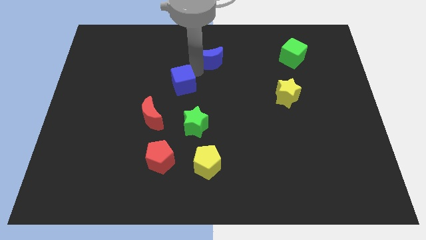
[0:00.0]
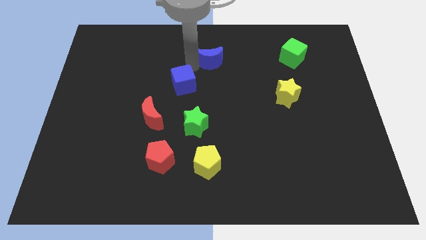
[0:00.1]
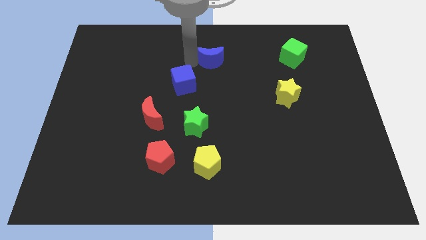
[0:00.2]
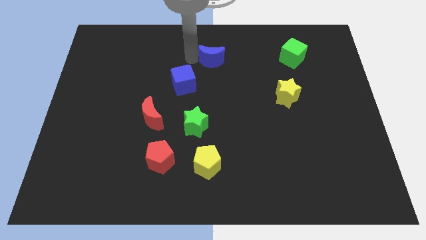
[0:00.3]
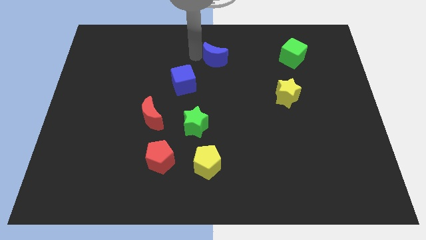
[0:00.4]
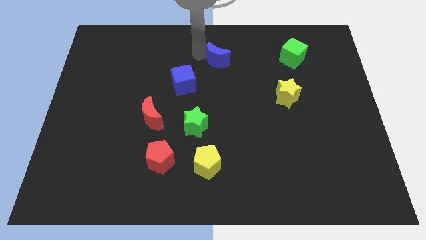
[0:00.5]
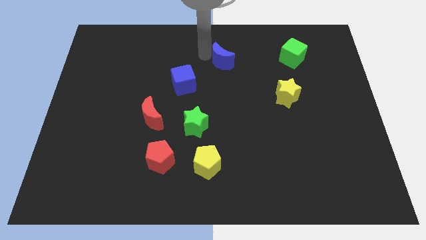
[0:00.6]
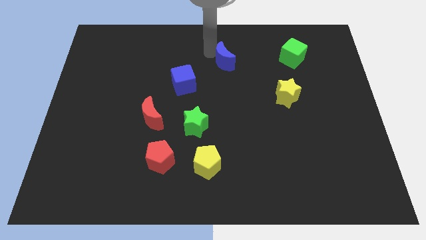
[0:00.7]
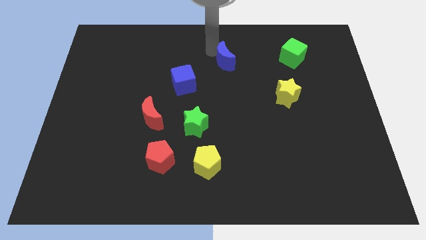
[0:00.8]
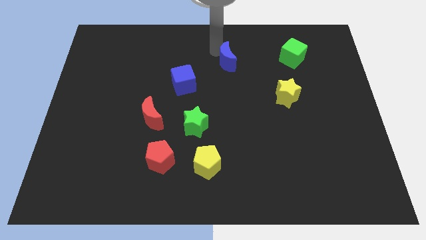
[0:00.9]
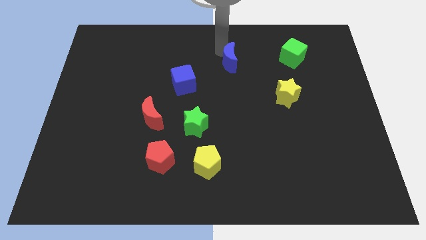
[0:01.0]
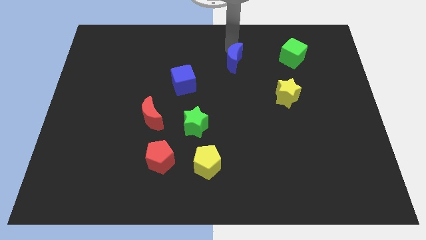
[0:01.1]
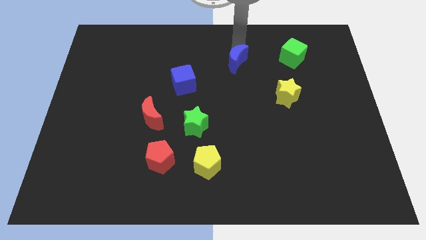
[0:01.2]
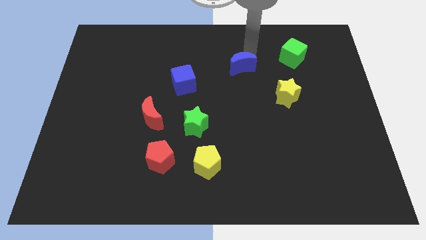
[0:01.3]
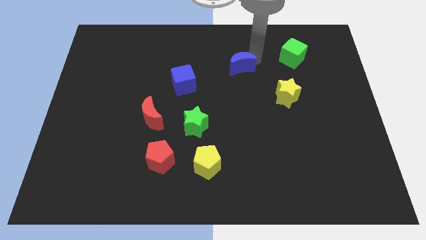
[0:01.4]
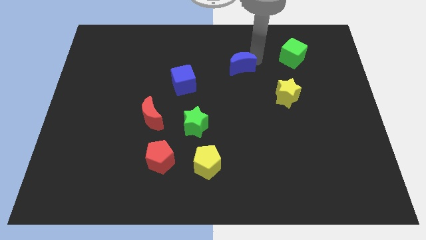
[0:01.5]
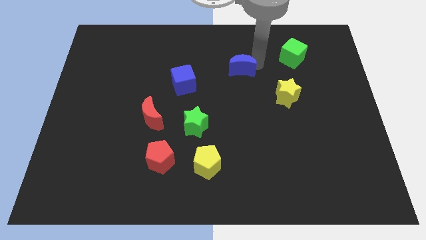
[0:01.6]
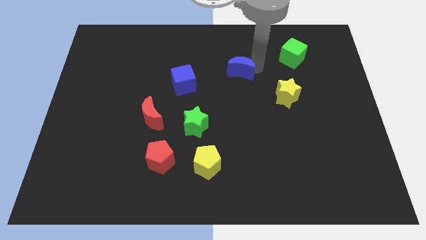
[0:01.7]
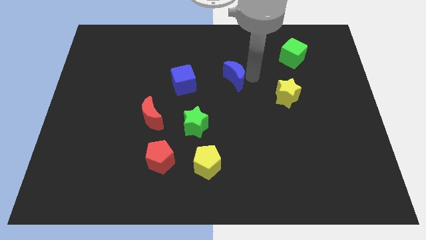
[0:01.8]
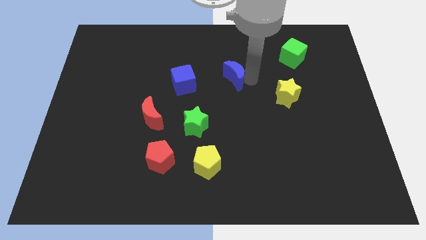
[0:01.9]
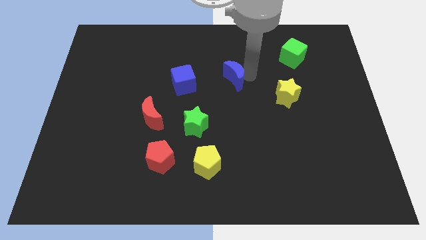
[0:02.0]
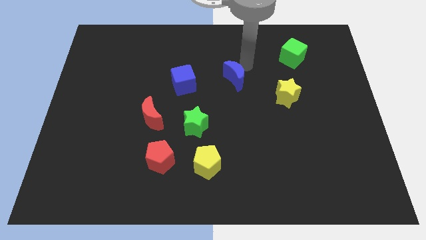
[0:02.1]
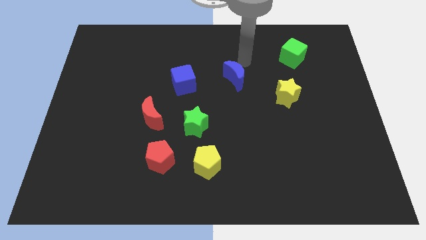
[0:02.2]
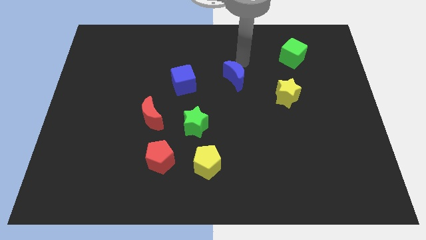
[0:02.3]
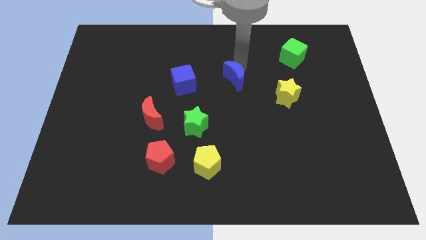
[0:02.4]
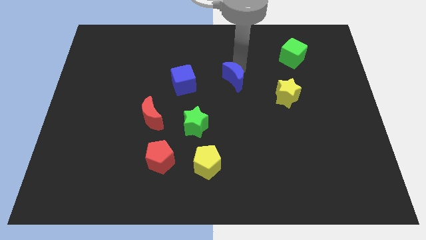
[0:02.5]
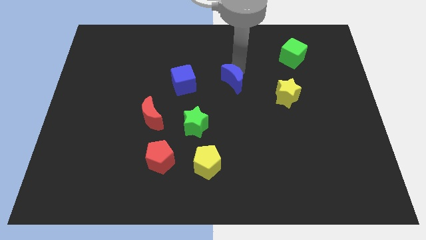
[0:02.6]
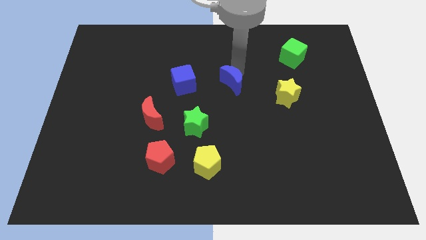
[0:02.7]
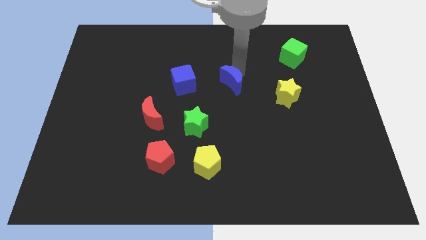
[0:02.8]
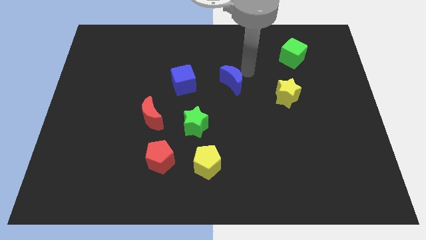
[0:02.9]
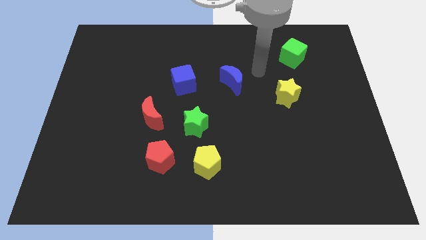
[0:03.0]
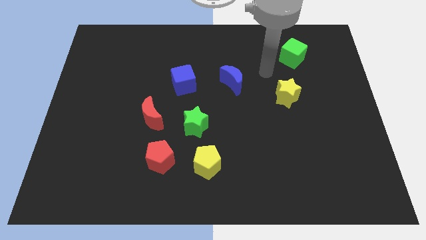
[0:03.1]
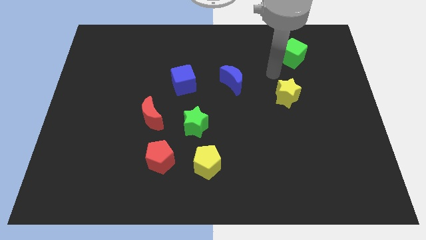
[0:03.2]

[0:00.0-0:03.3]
place the blue crescent in the middle of the blue cube and the yellow star

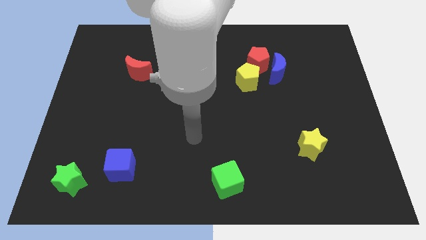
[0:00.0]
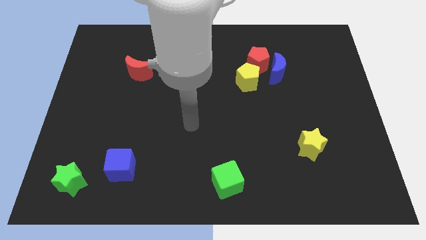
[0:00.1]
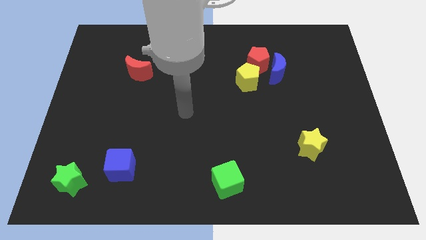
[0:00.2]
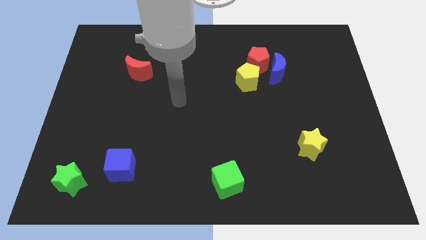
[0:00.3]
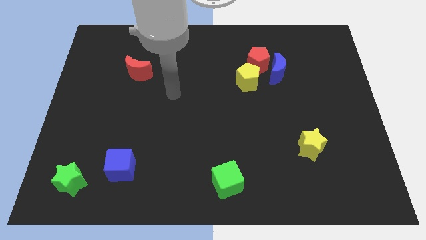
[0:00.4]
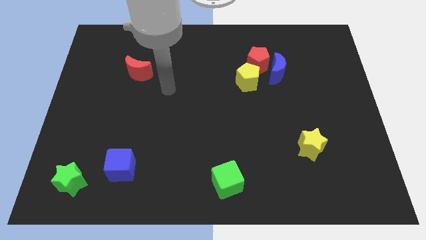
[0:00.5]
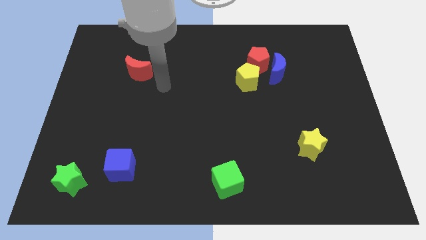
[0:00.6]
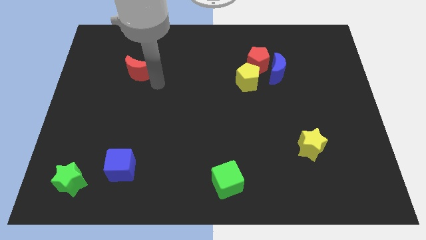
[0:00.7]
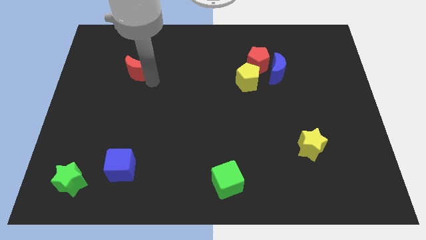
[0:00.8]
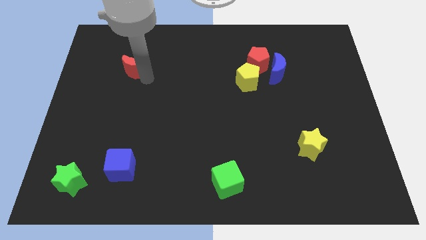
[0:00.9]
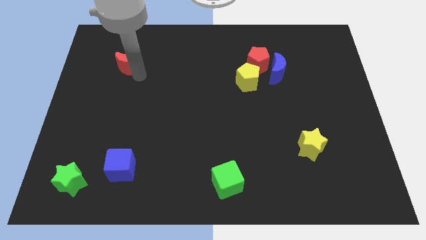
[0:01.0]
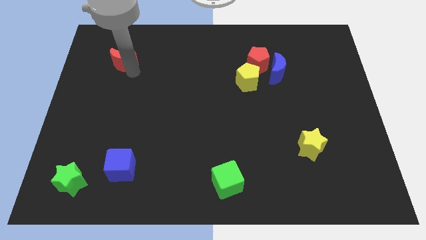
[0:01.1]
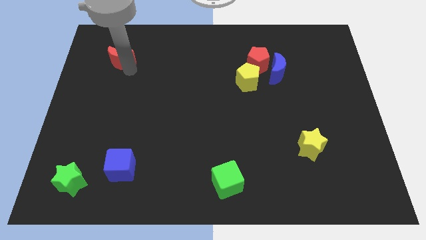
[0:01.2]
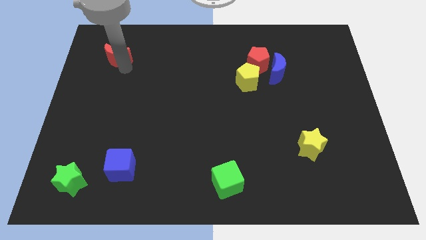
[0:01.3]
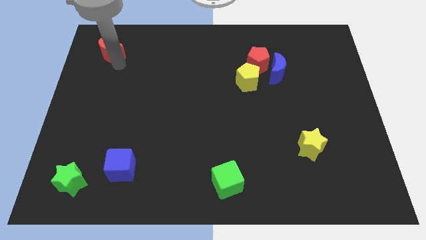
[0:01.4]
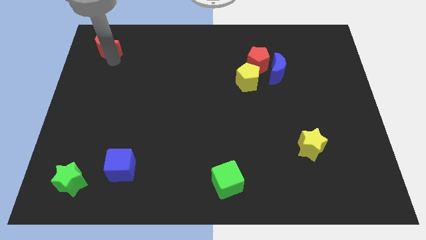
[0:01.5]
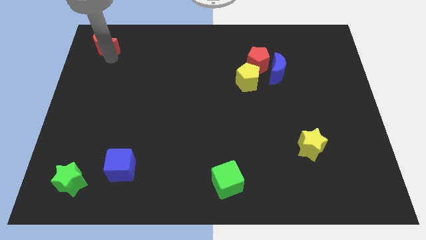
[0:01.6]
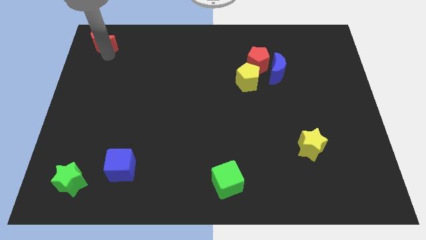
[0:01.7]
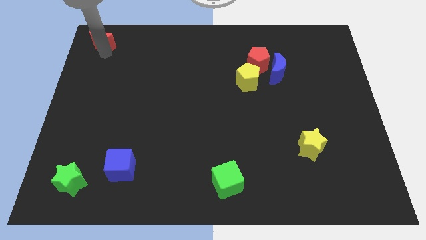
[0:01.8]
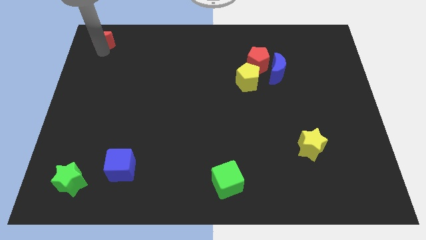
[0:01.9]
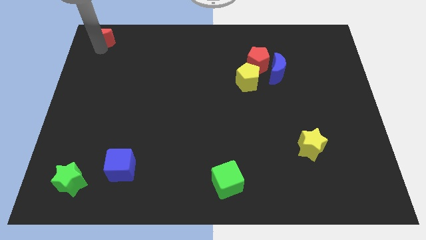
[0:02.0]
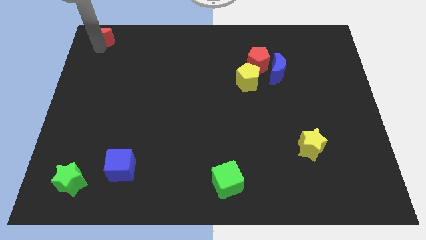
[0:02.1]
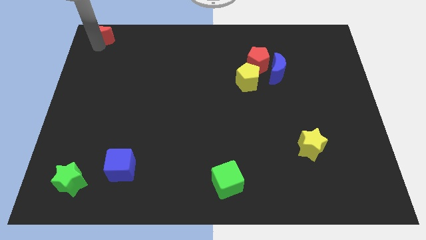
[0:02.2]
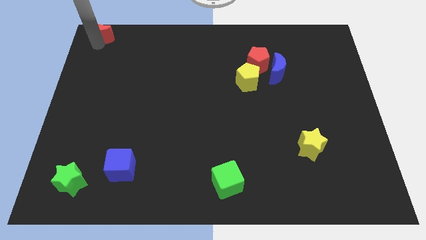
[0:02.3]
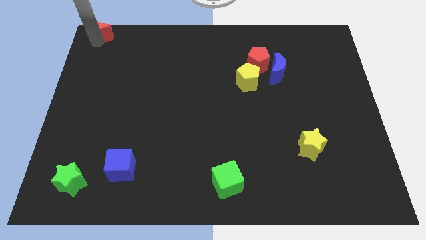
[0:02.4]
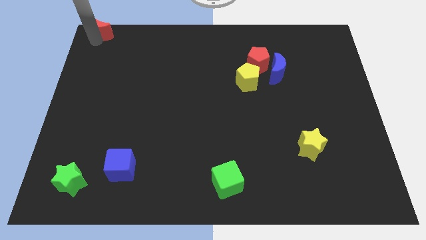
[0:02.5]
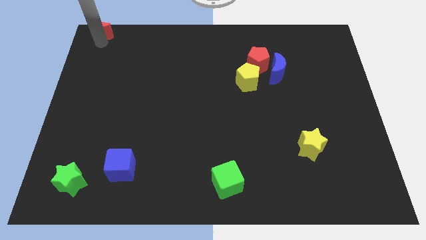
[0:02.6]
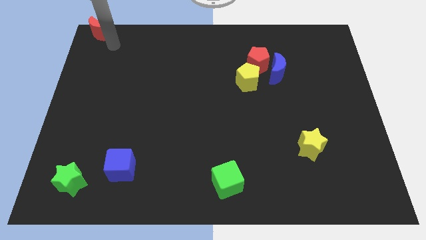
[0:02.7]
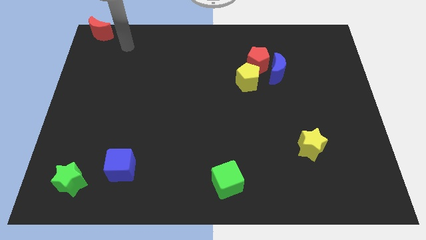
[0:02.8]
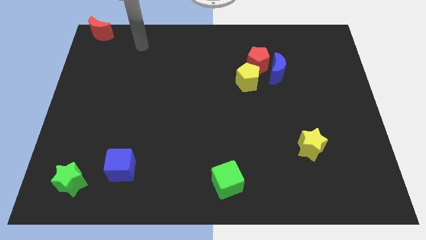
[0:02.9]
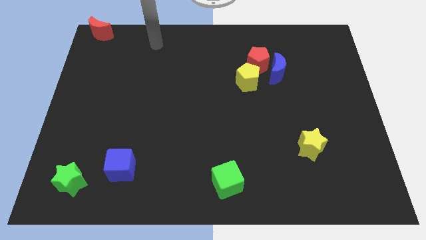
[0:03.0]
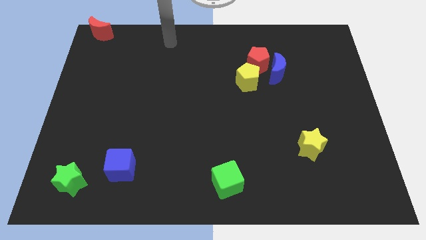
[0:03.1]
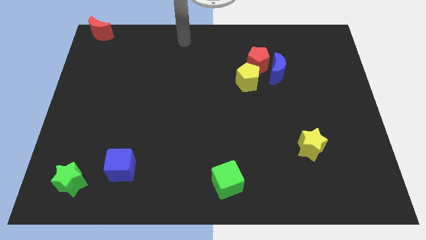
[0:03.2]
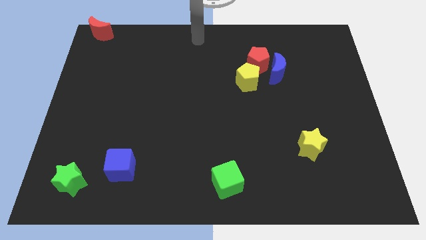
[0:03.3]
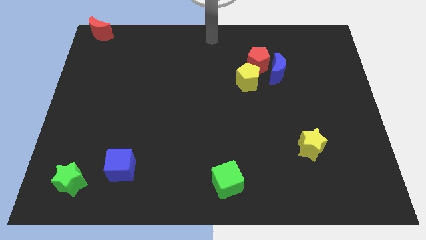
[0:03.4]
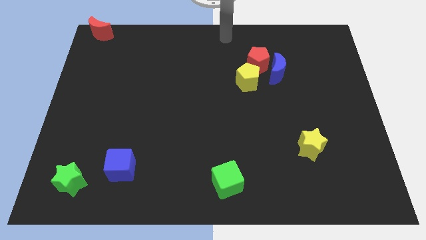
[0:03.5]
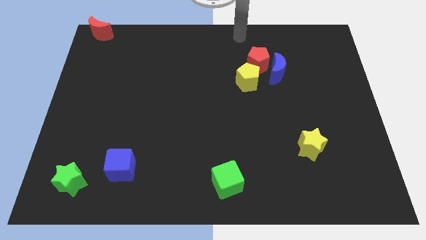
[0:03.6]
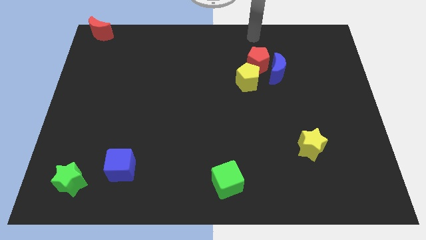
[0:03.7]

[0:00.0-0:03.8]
put the red moon to the top left corner of the board

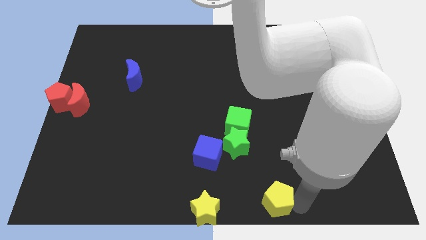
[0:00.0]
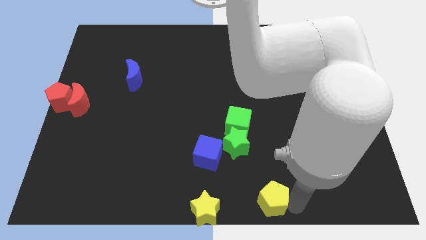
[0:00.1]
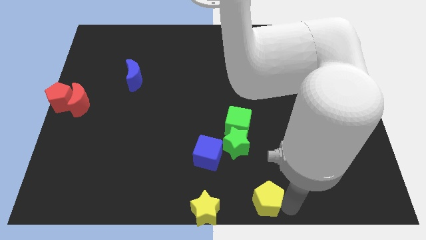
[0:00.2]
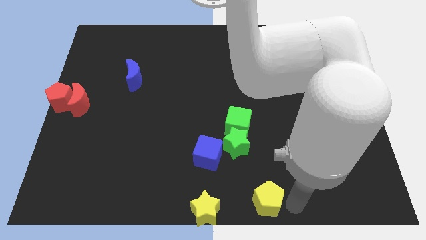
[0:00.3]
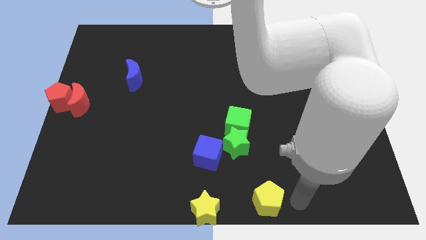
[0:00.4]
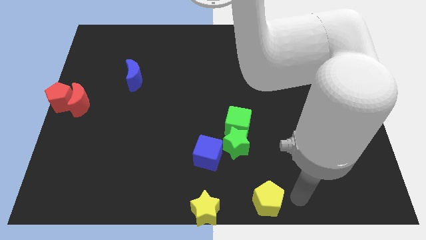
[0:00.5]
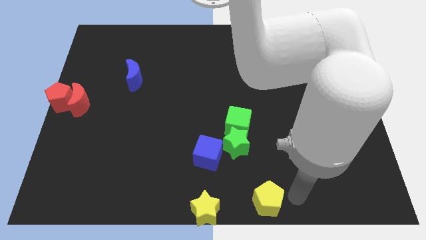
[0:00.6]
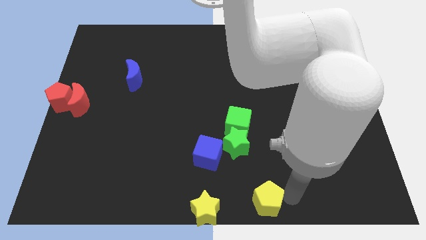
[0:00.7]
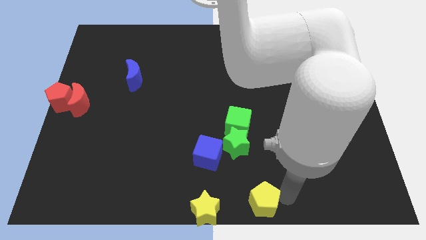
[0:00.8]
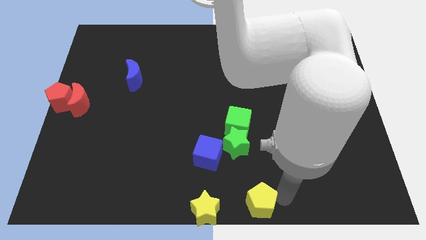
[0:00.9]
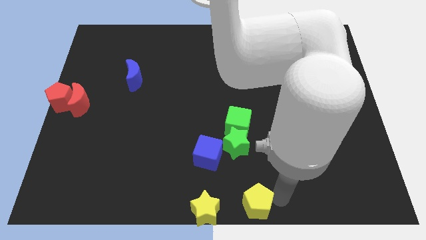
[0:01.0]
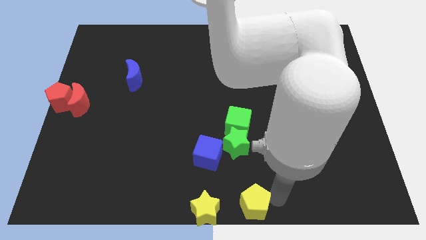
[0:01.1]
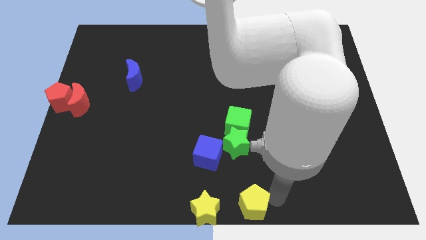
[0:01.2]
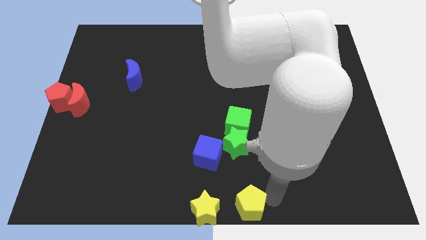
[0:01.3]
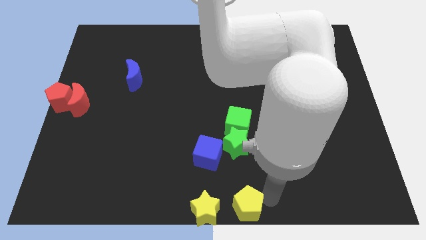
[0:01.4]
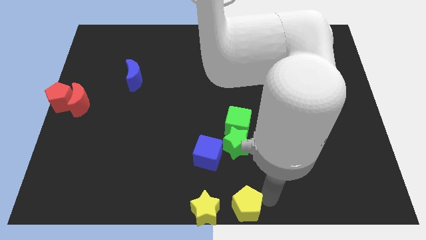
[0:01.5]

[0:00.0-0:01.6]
push the yellow pentagon towards yellow star

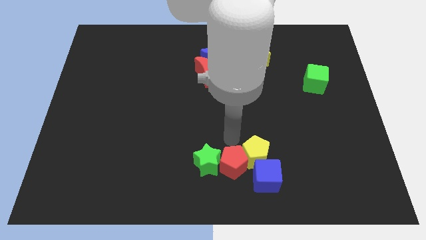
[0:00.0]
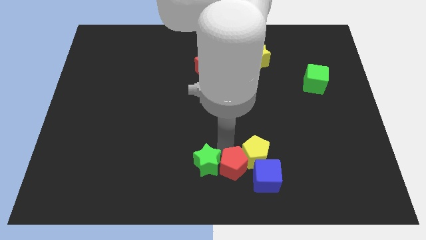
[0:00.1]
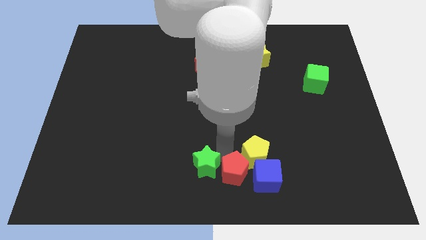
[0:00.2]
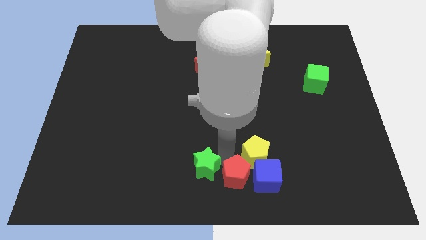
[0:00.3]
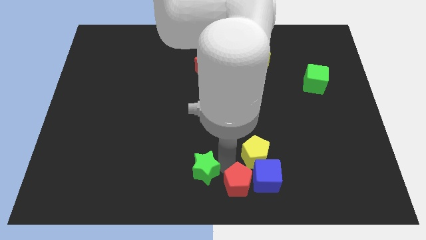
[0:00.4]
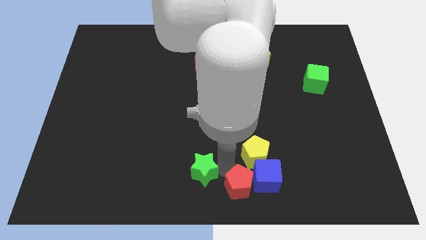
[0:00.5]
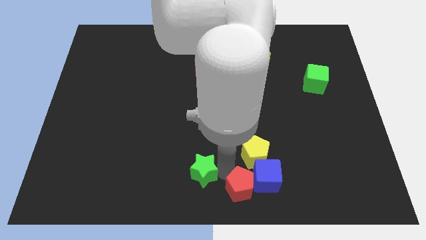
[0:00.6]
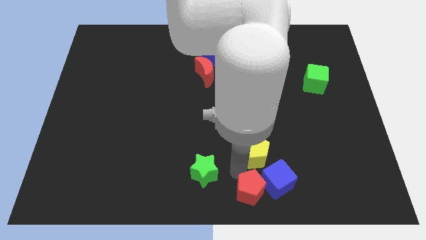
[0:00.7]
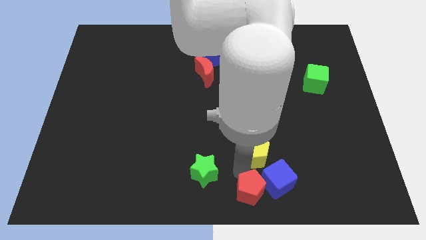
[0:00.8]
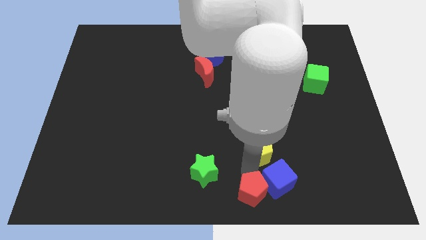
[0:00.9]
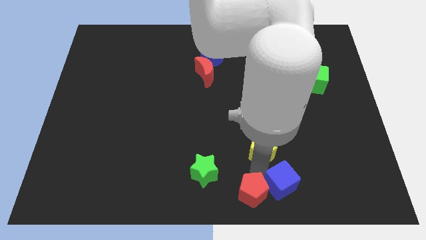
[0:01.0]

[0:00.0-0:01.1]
push the red pentagon into the left of blue cube
